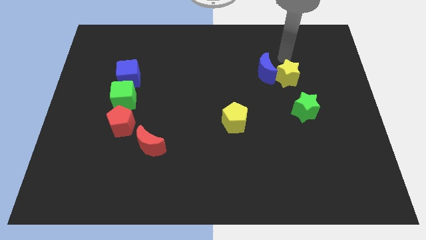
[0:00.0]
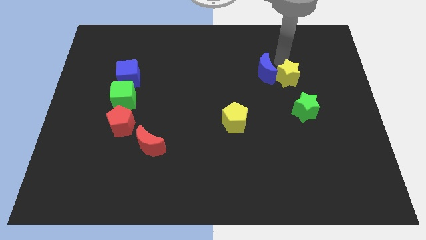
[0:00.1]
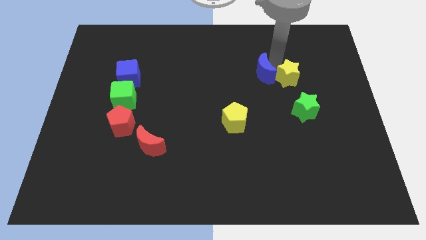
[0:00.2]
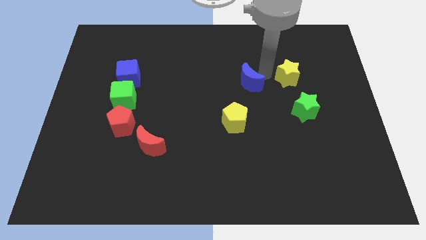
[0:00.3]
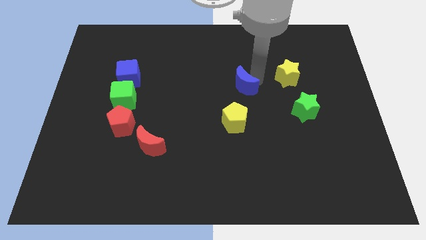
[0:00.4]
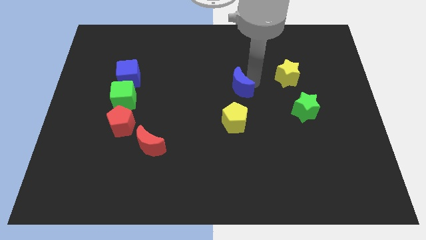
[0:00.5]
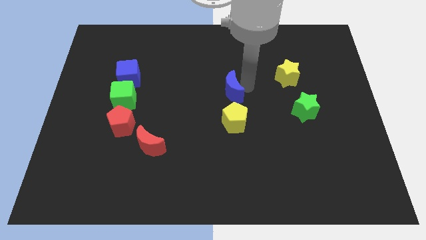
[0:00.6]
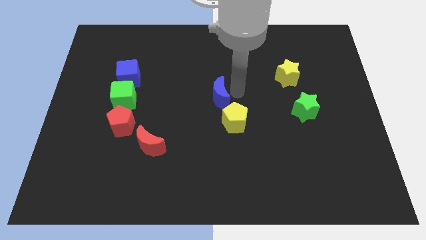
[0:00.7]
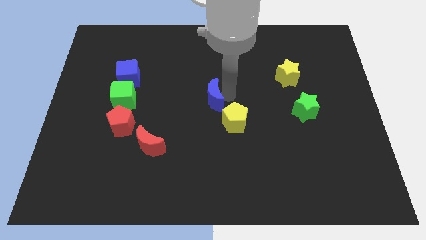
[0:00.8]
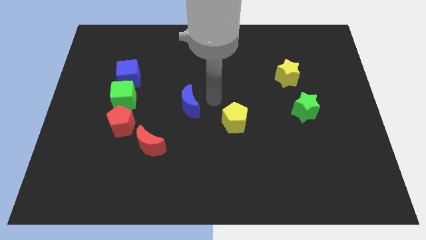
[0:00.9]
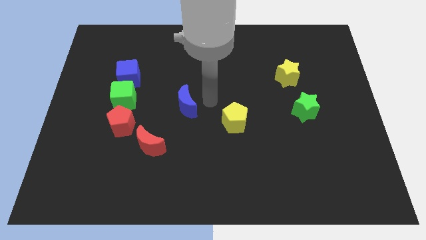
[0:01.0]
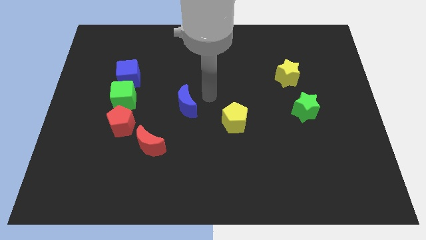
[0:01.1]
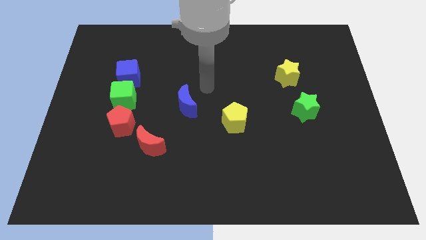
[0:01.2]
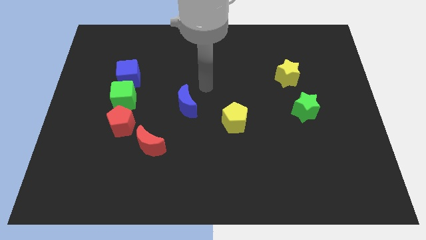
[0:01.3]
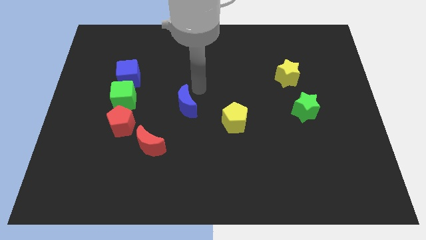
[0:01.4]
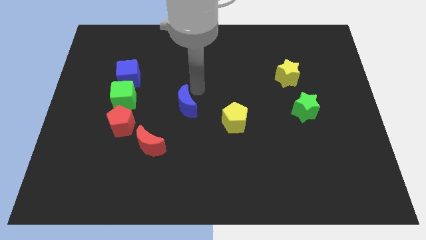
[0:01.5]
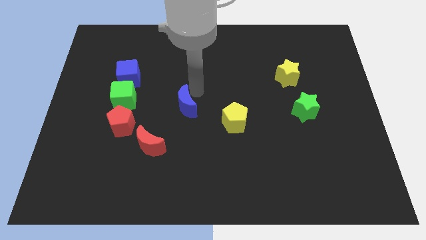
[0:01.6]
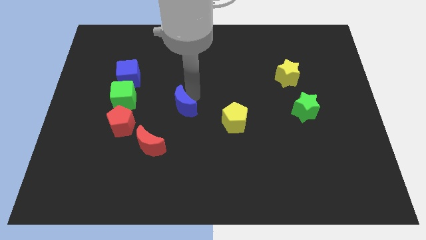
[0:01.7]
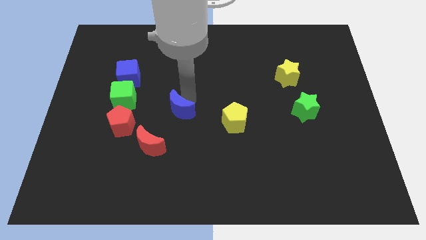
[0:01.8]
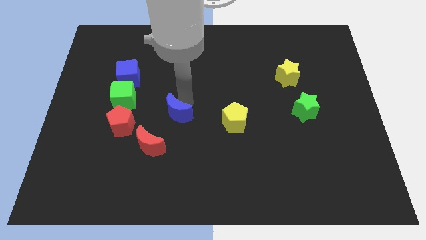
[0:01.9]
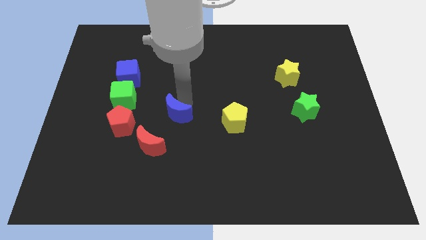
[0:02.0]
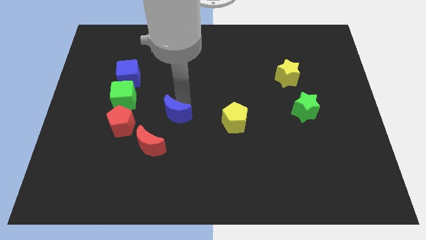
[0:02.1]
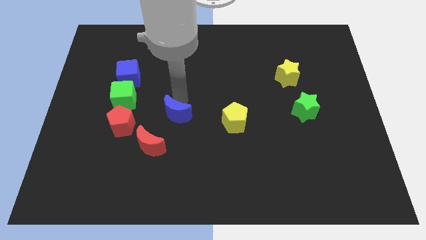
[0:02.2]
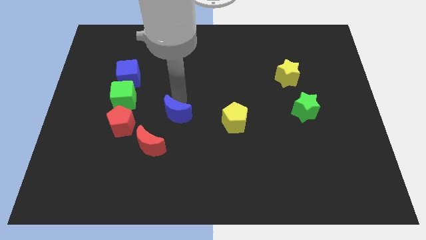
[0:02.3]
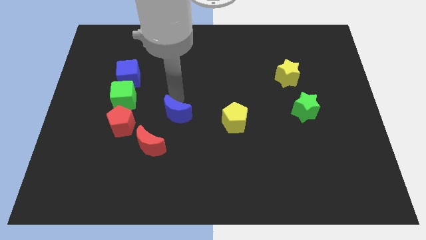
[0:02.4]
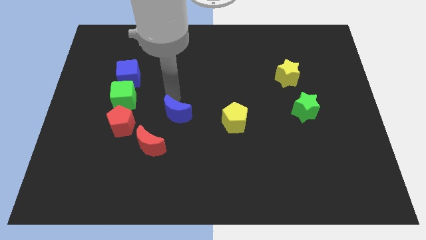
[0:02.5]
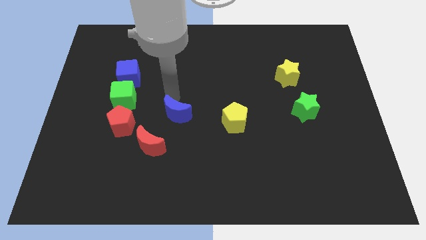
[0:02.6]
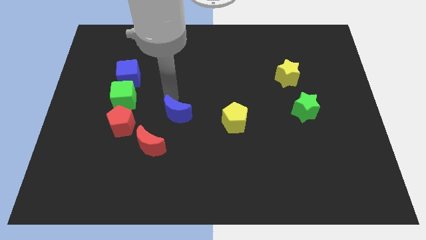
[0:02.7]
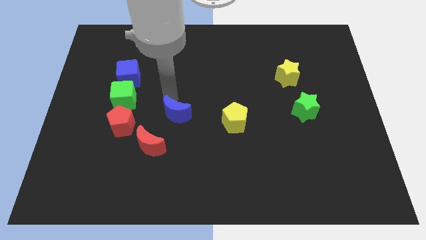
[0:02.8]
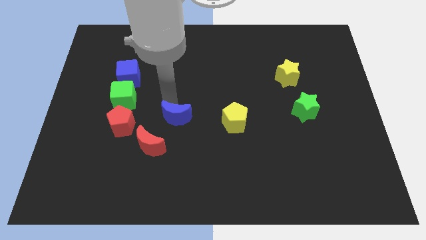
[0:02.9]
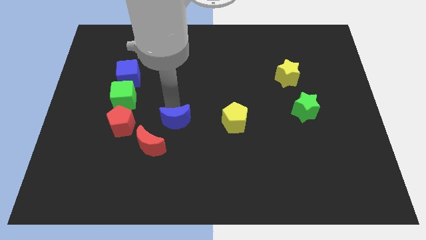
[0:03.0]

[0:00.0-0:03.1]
place the blue moon diagonally to the red moon

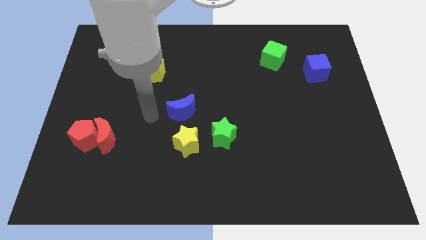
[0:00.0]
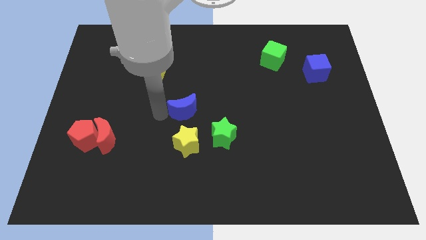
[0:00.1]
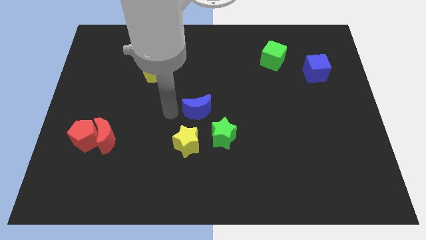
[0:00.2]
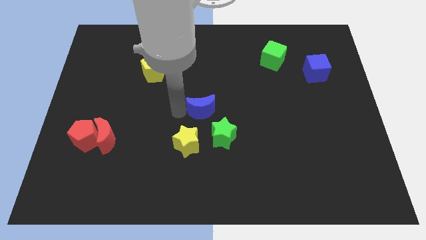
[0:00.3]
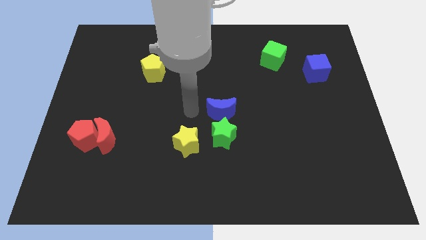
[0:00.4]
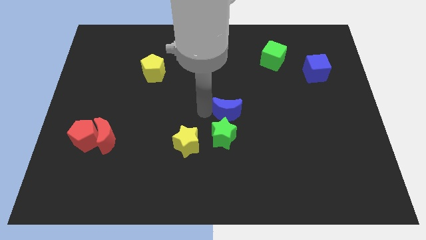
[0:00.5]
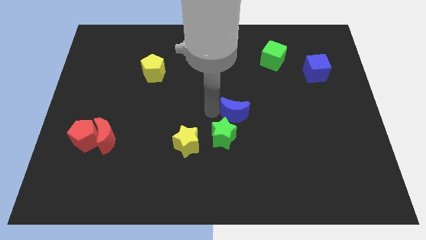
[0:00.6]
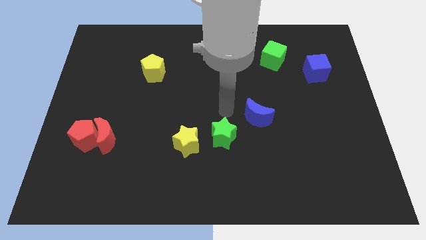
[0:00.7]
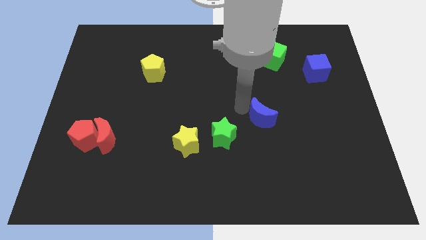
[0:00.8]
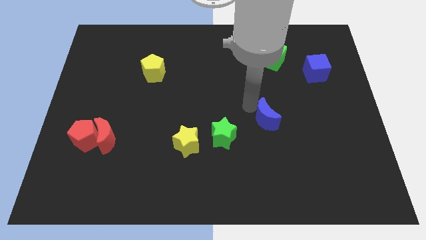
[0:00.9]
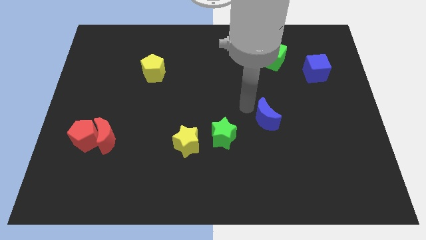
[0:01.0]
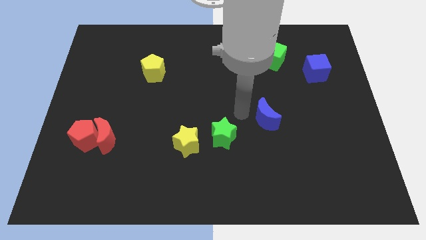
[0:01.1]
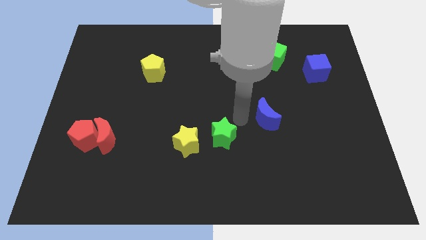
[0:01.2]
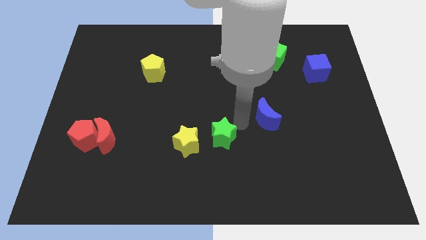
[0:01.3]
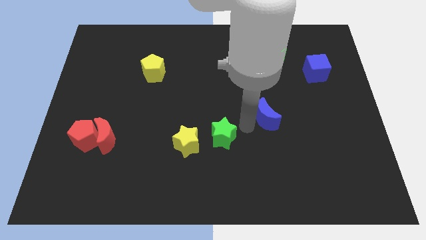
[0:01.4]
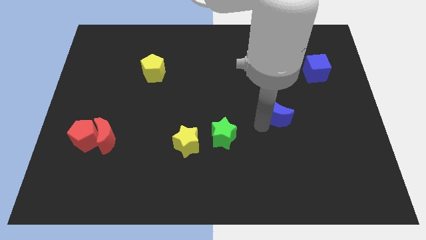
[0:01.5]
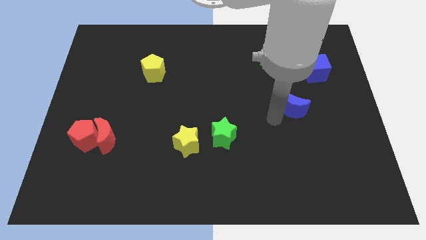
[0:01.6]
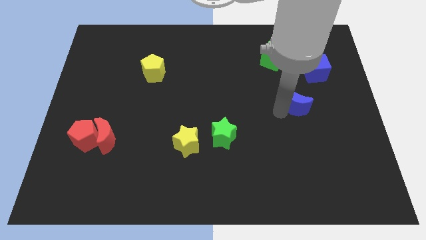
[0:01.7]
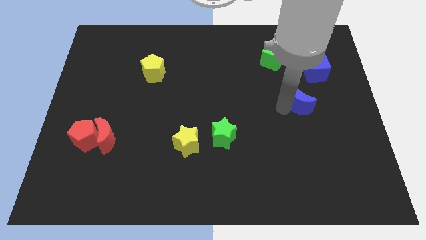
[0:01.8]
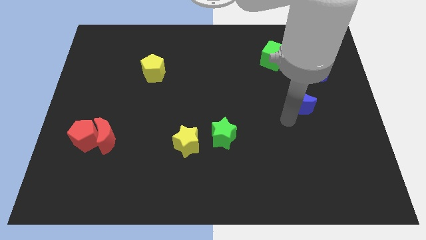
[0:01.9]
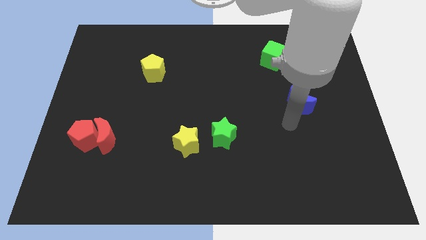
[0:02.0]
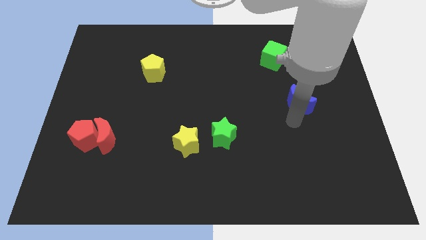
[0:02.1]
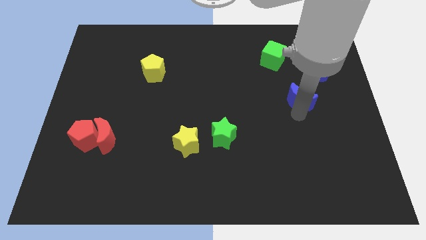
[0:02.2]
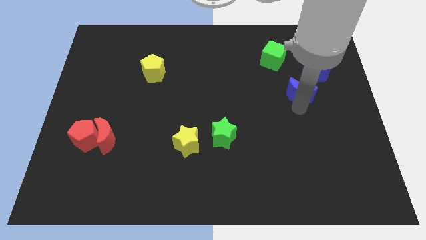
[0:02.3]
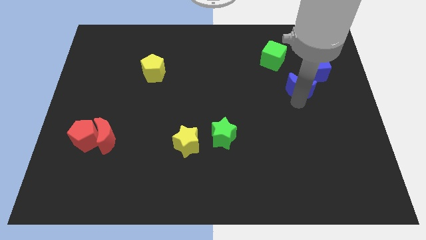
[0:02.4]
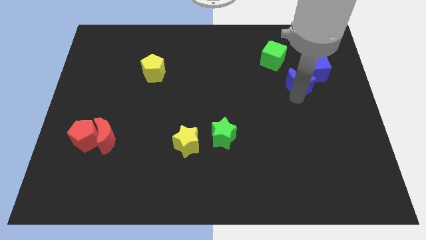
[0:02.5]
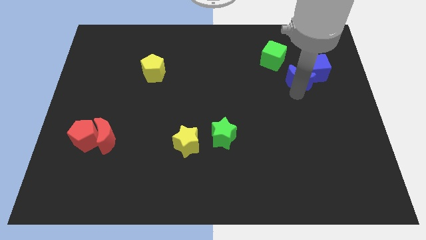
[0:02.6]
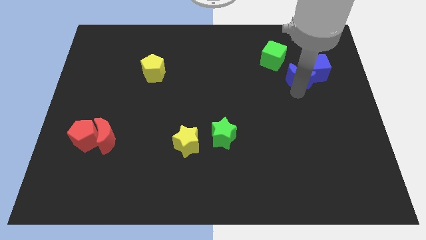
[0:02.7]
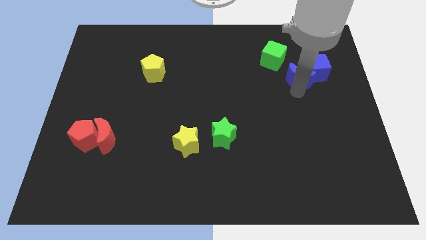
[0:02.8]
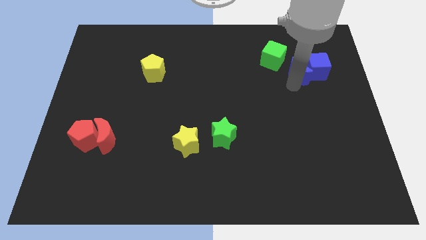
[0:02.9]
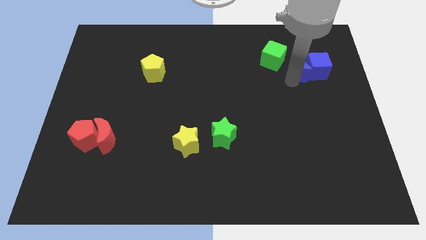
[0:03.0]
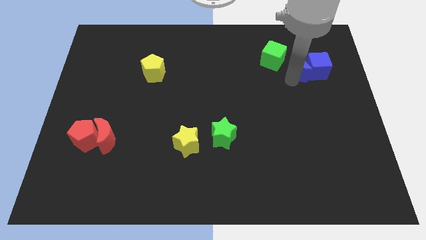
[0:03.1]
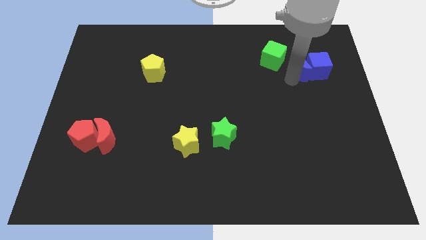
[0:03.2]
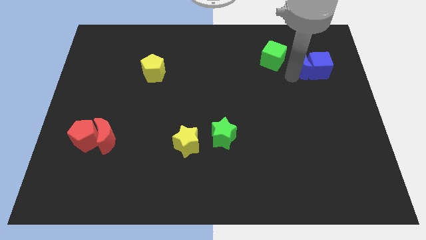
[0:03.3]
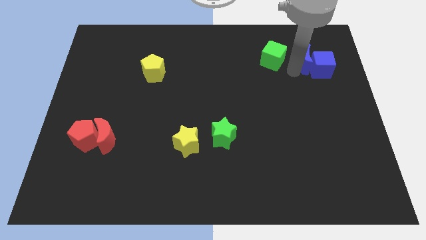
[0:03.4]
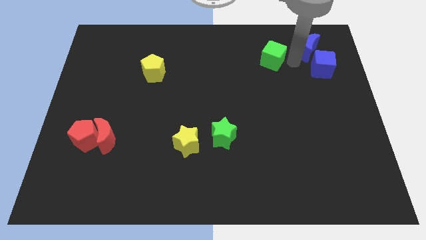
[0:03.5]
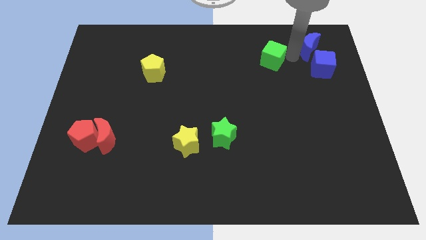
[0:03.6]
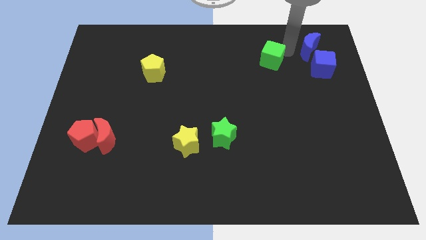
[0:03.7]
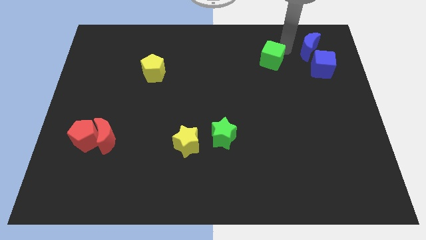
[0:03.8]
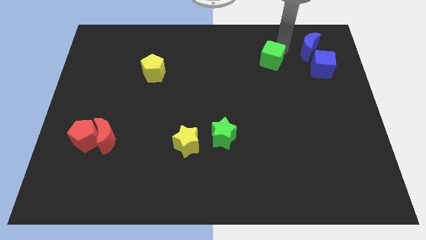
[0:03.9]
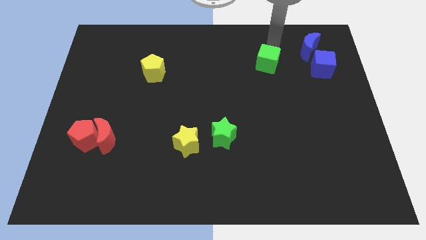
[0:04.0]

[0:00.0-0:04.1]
push the blue crescent into the blue cube

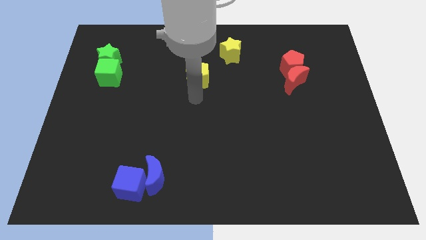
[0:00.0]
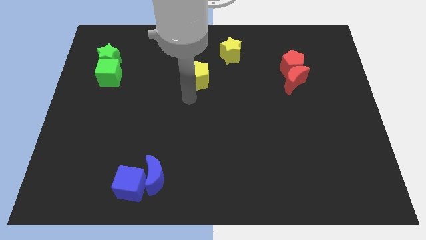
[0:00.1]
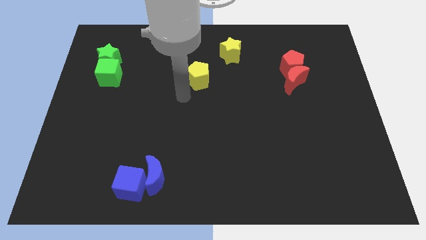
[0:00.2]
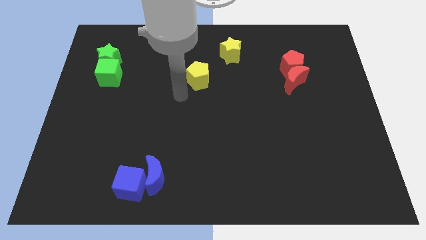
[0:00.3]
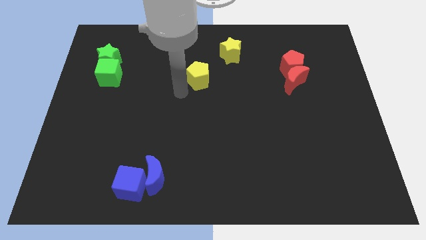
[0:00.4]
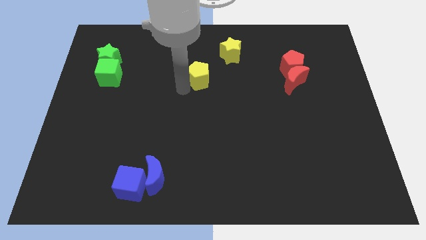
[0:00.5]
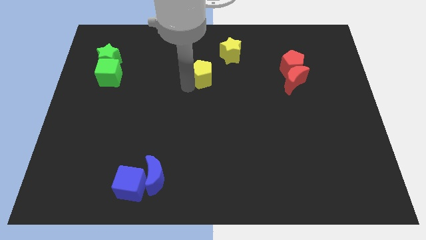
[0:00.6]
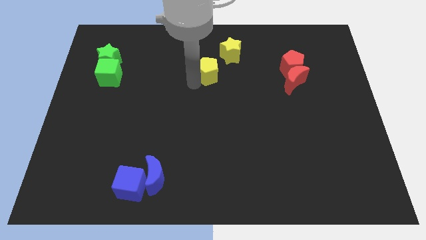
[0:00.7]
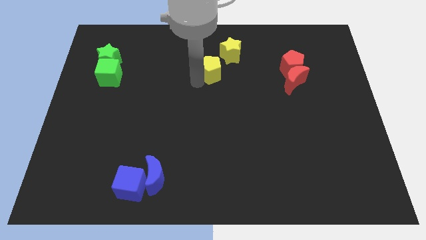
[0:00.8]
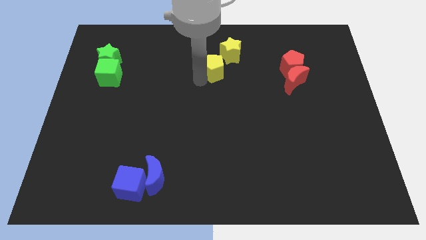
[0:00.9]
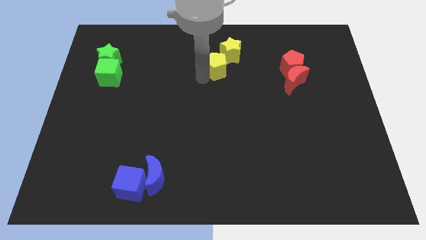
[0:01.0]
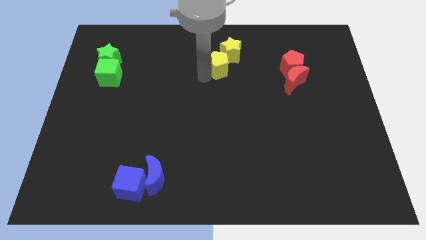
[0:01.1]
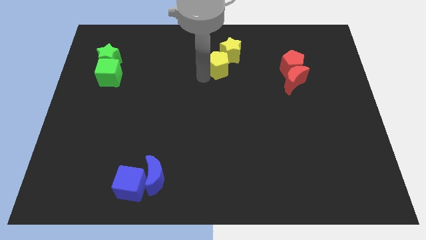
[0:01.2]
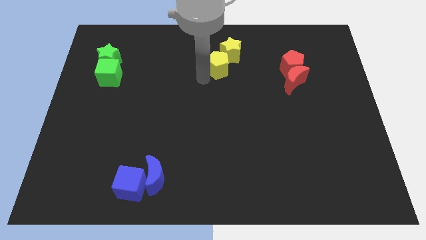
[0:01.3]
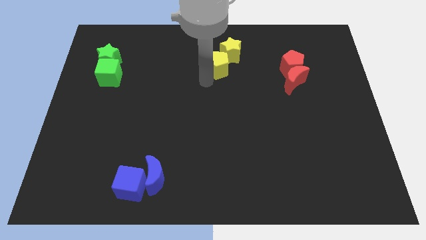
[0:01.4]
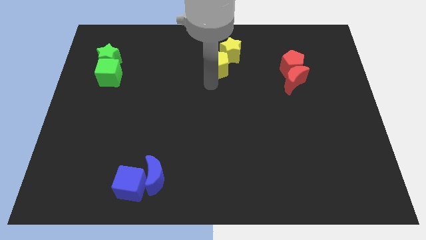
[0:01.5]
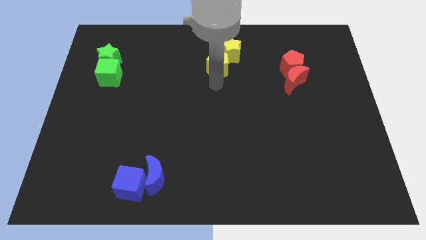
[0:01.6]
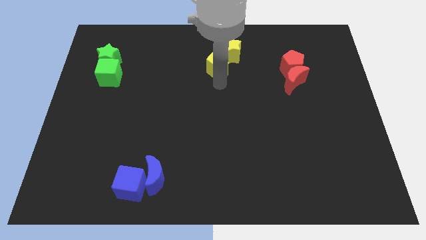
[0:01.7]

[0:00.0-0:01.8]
push the yellow pentagon into the yellow star
